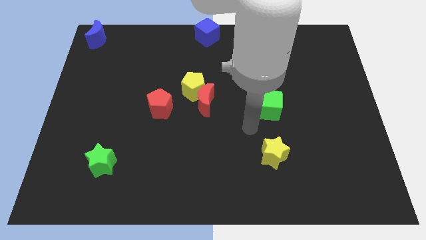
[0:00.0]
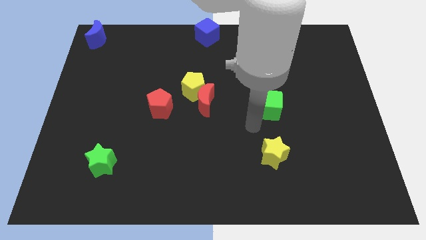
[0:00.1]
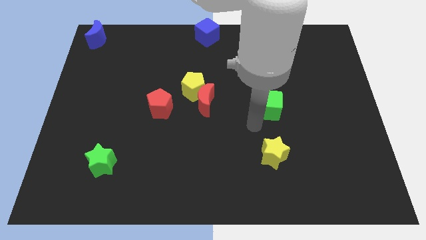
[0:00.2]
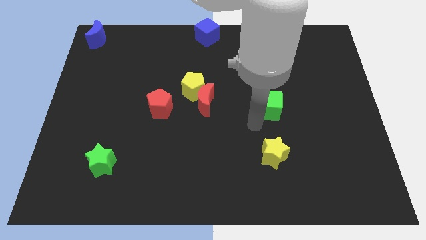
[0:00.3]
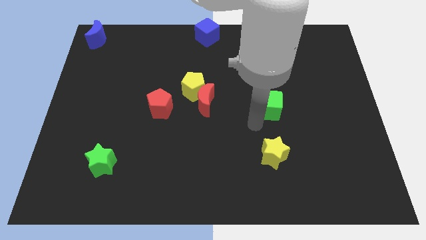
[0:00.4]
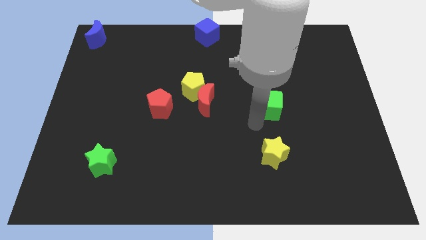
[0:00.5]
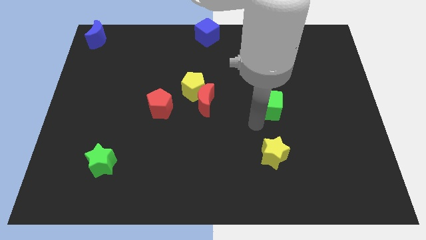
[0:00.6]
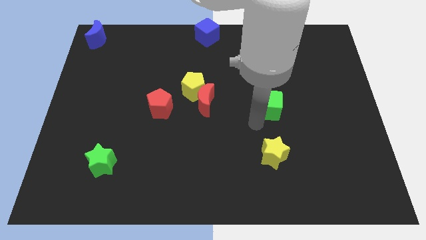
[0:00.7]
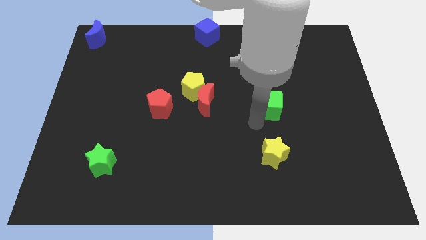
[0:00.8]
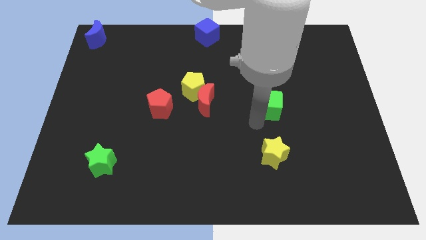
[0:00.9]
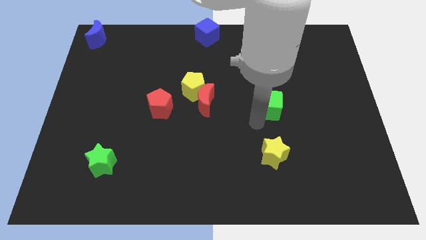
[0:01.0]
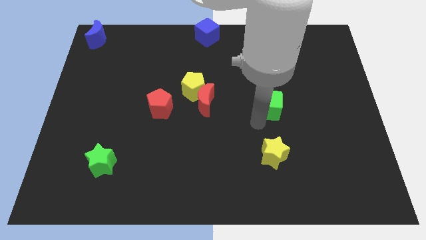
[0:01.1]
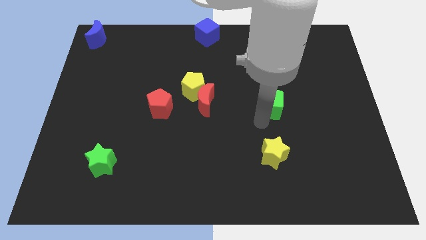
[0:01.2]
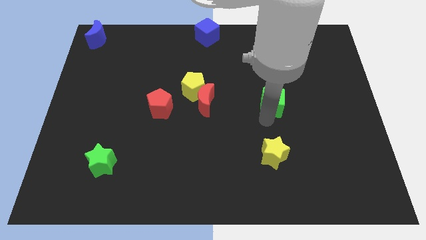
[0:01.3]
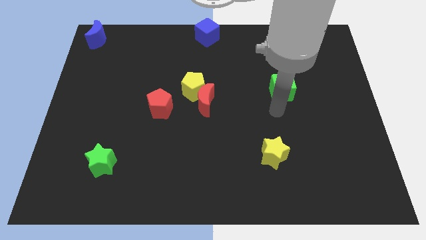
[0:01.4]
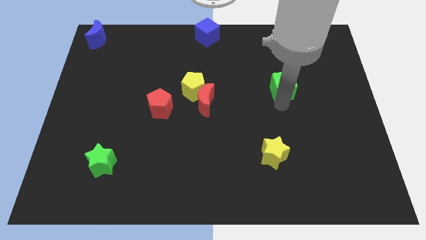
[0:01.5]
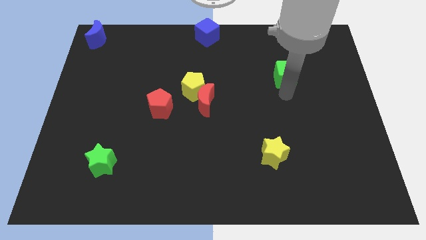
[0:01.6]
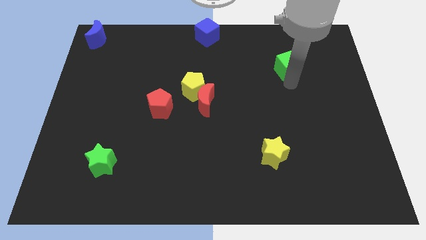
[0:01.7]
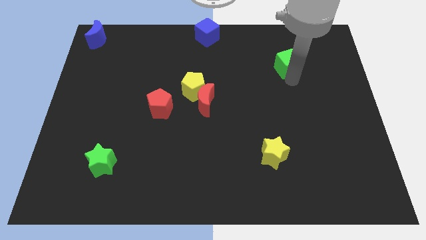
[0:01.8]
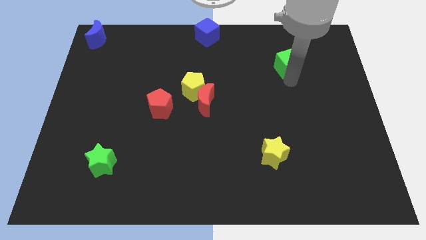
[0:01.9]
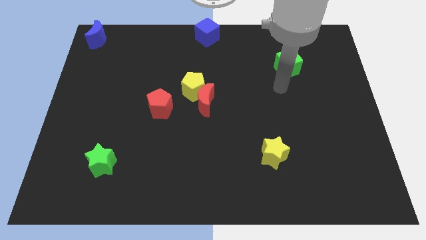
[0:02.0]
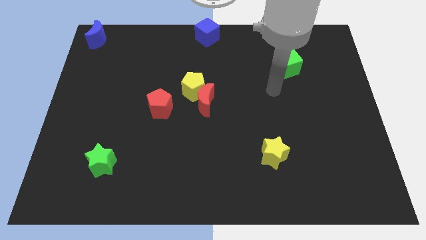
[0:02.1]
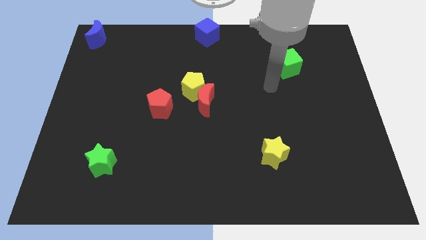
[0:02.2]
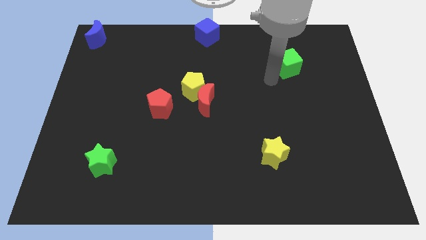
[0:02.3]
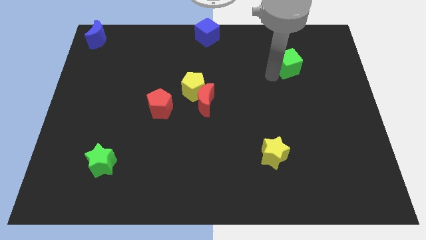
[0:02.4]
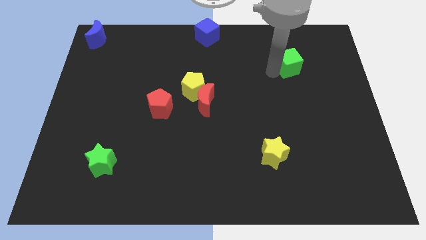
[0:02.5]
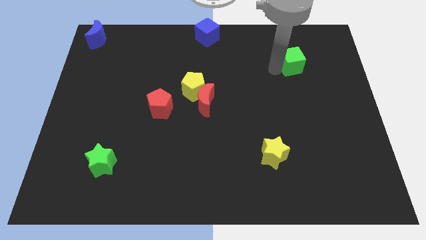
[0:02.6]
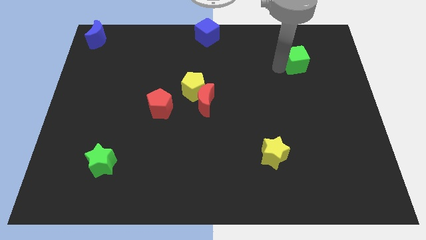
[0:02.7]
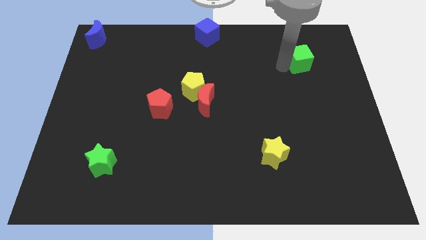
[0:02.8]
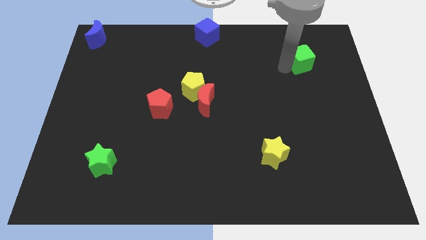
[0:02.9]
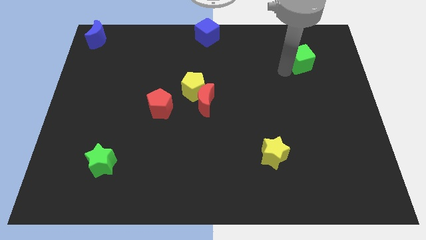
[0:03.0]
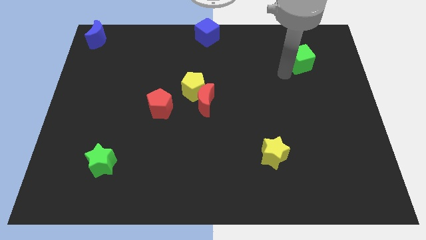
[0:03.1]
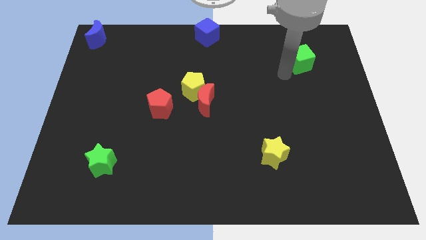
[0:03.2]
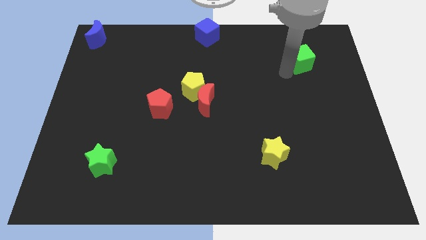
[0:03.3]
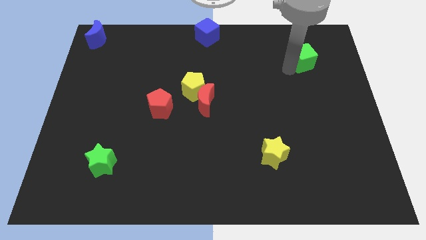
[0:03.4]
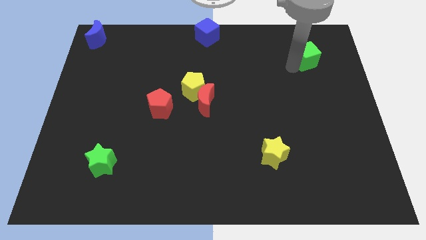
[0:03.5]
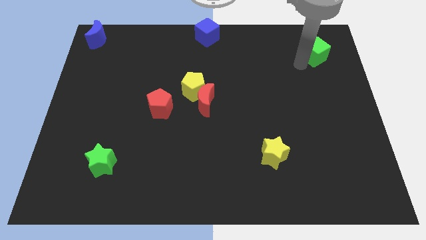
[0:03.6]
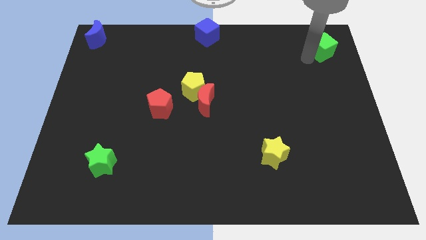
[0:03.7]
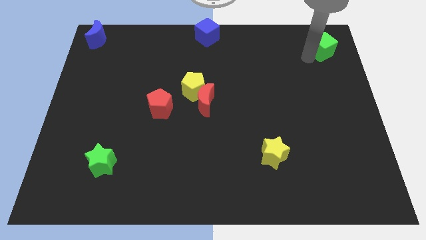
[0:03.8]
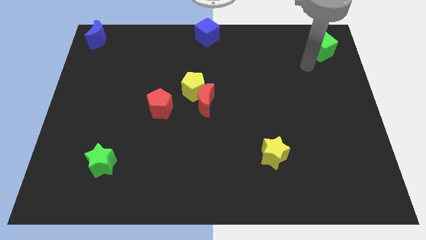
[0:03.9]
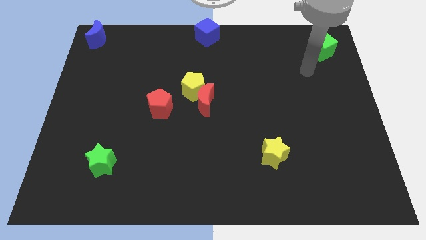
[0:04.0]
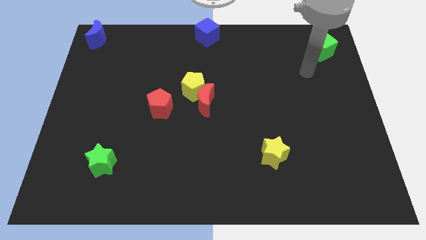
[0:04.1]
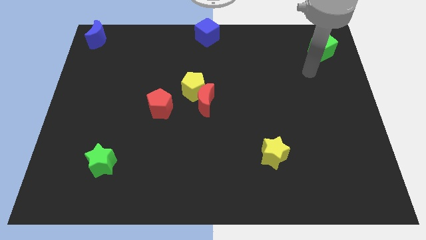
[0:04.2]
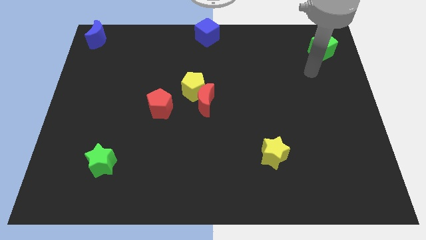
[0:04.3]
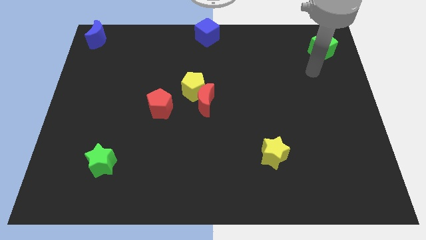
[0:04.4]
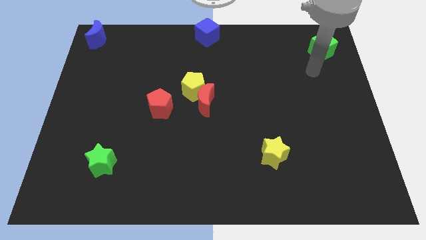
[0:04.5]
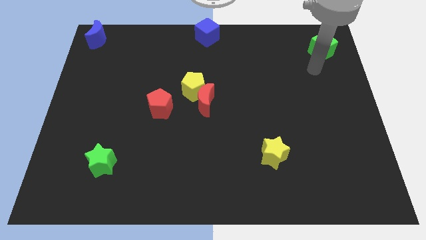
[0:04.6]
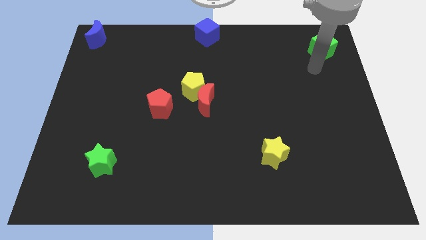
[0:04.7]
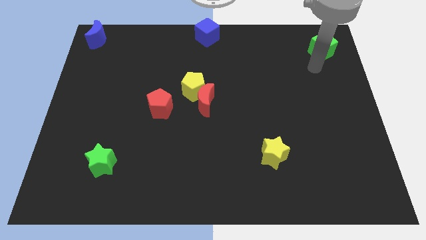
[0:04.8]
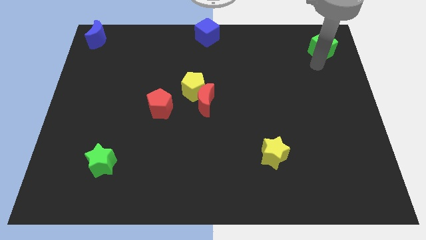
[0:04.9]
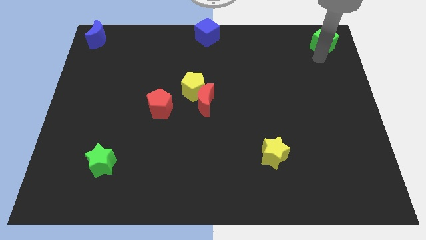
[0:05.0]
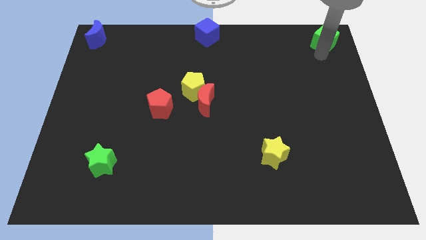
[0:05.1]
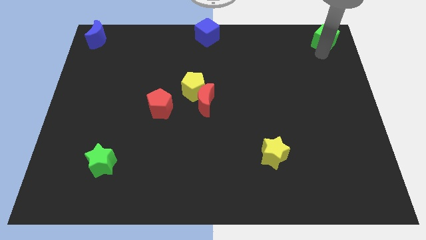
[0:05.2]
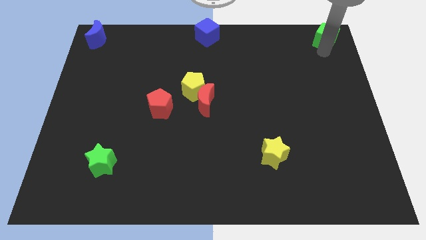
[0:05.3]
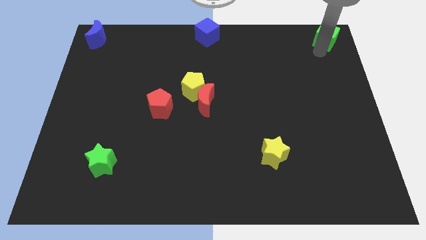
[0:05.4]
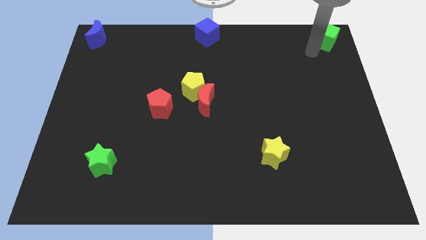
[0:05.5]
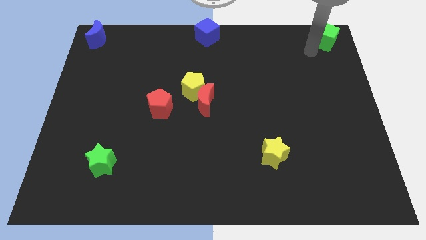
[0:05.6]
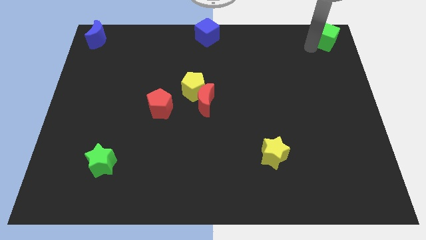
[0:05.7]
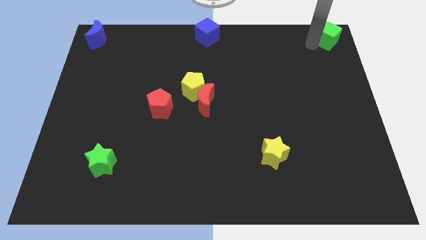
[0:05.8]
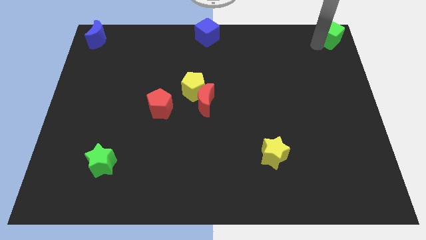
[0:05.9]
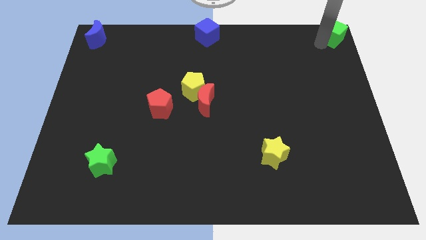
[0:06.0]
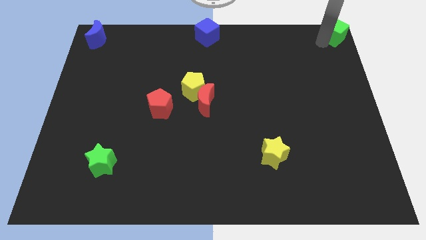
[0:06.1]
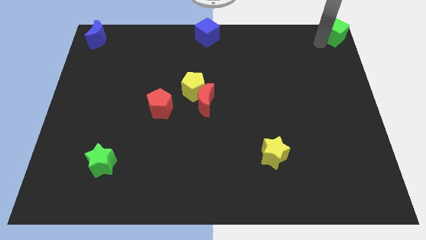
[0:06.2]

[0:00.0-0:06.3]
slide the green cube to the top right of the board

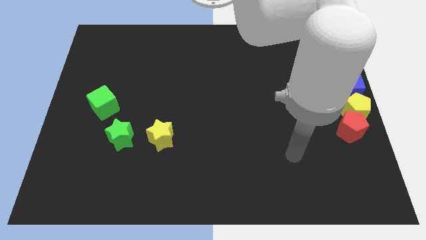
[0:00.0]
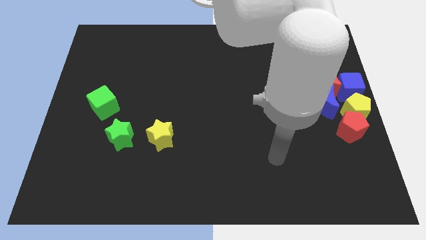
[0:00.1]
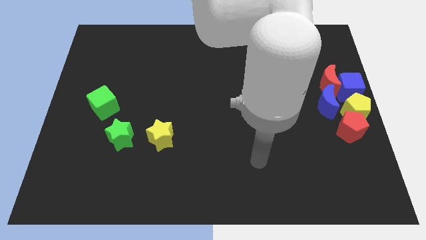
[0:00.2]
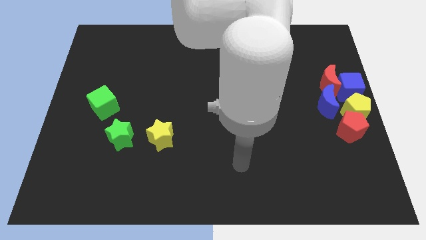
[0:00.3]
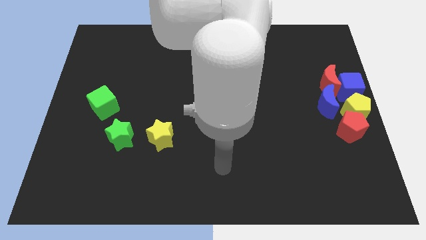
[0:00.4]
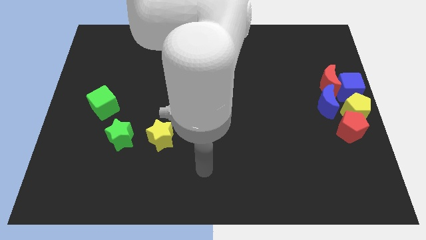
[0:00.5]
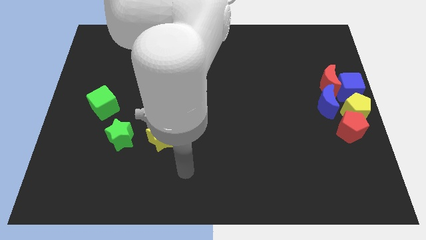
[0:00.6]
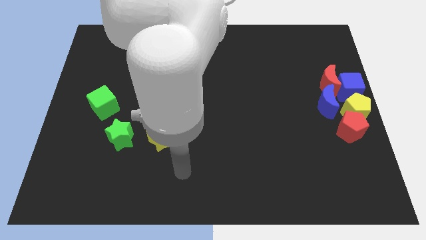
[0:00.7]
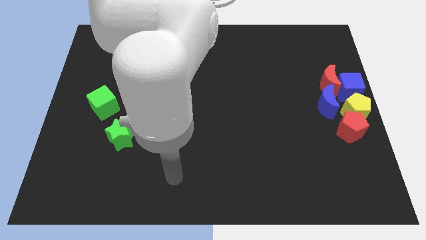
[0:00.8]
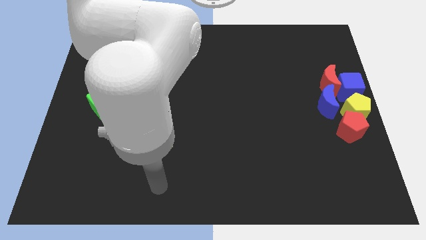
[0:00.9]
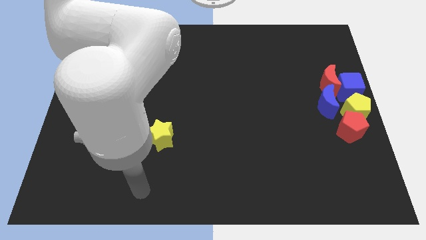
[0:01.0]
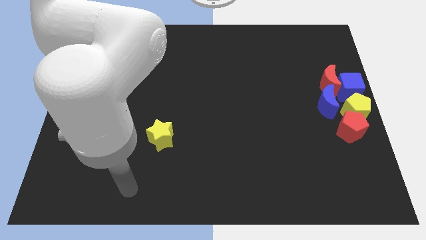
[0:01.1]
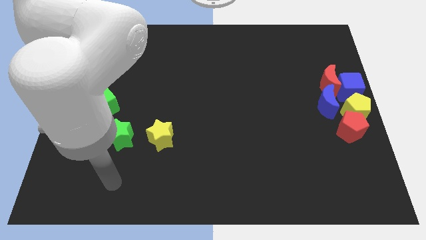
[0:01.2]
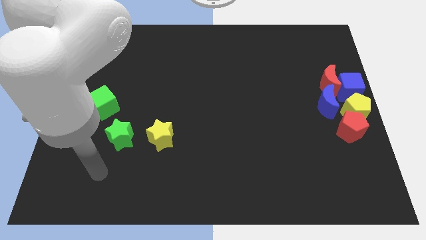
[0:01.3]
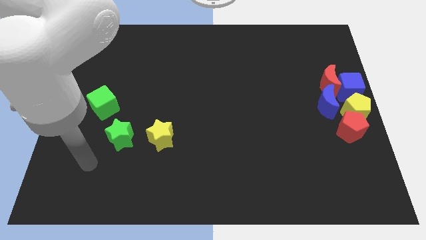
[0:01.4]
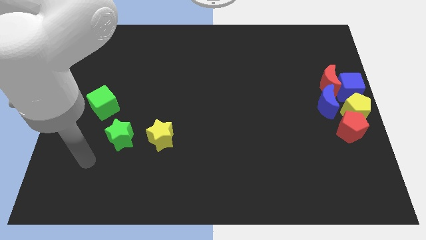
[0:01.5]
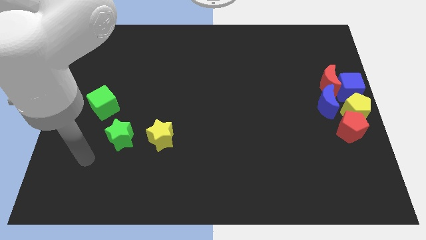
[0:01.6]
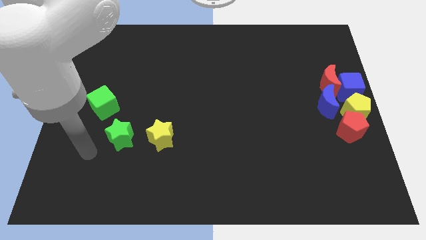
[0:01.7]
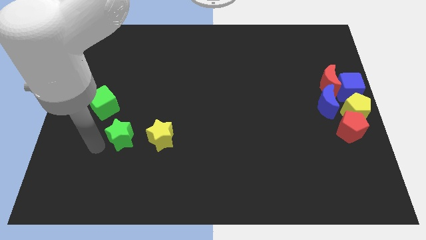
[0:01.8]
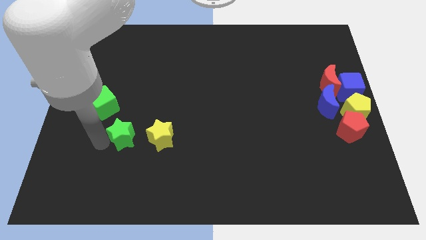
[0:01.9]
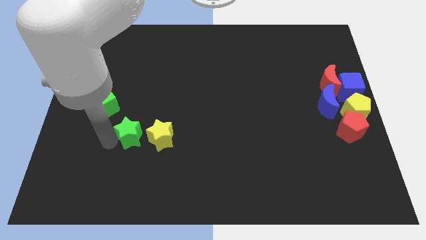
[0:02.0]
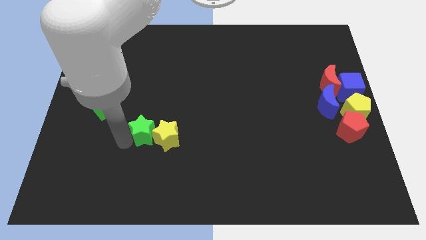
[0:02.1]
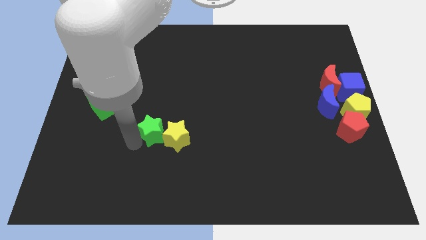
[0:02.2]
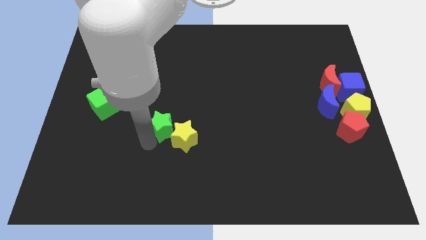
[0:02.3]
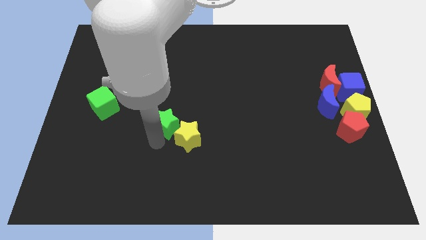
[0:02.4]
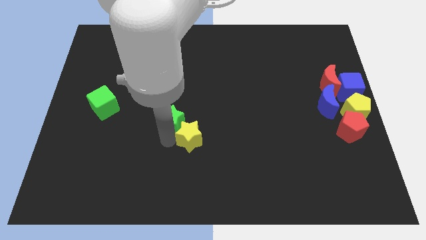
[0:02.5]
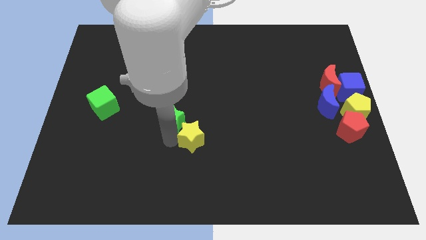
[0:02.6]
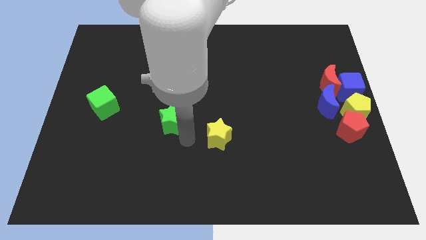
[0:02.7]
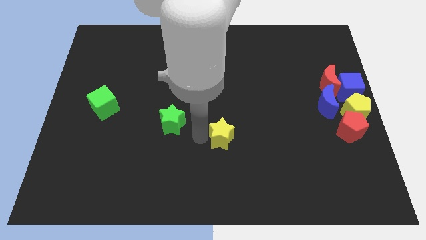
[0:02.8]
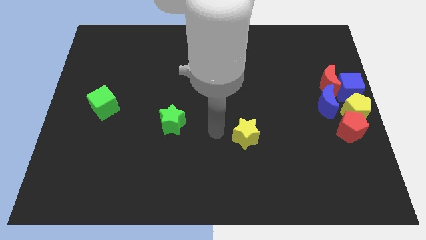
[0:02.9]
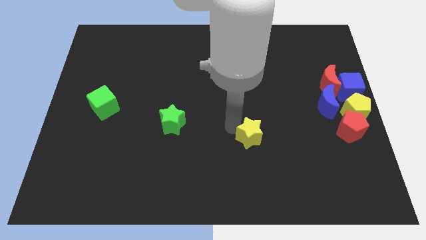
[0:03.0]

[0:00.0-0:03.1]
separate yellow and green stars from each other
